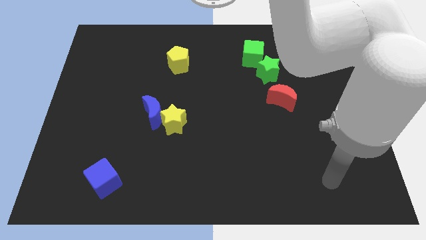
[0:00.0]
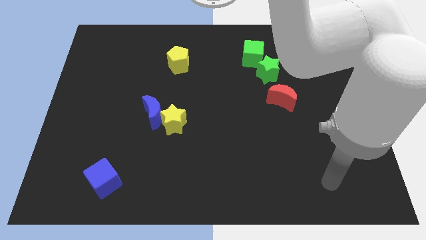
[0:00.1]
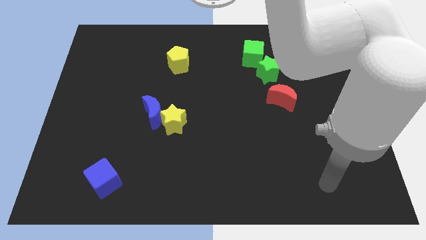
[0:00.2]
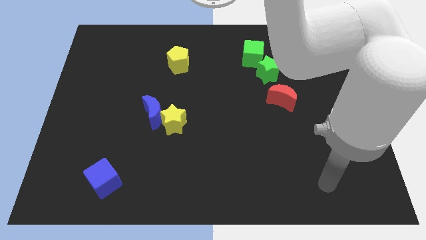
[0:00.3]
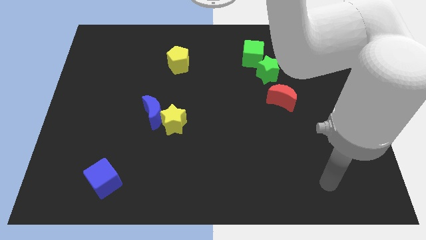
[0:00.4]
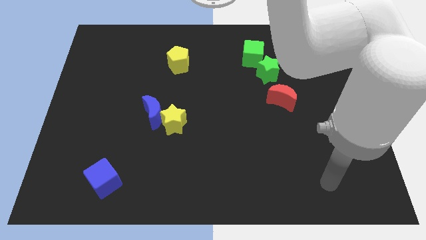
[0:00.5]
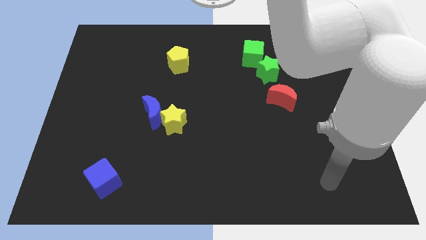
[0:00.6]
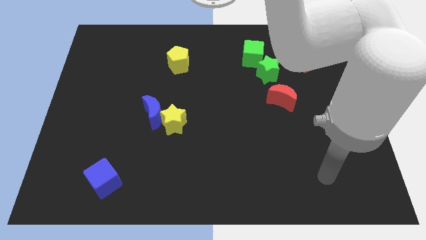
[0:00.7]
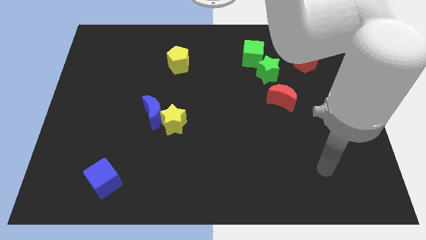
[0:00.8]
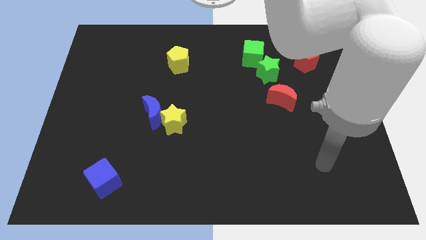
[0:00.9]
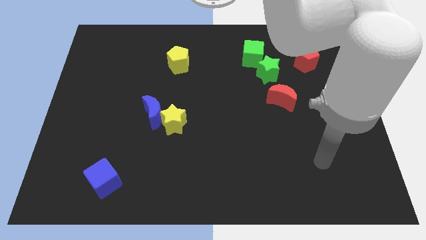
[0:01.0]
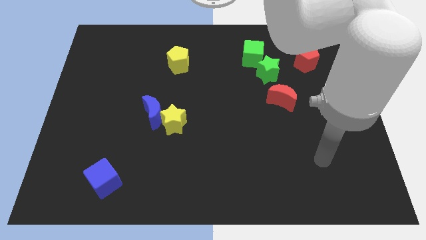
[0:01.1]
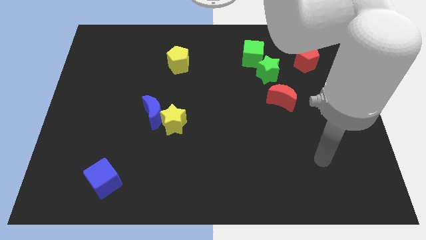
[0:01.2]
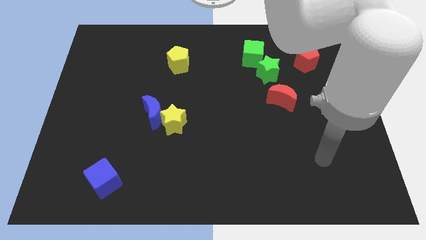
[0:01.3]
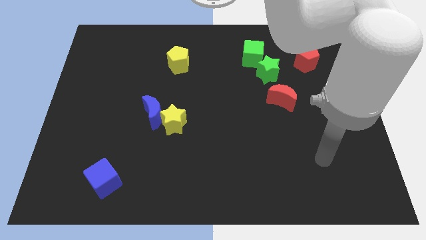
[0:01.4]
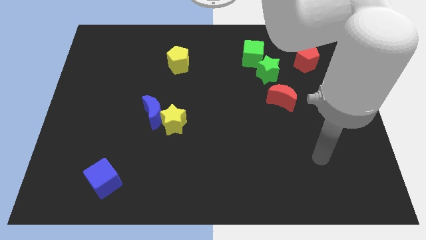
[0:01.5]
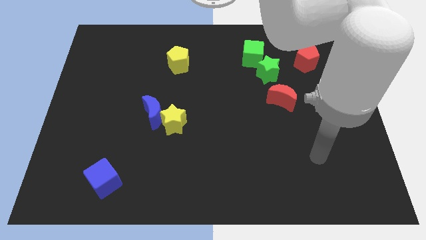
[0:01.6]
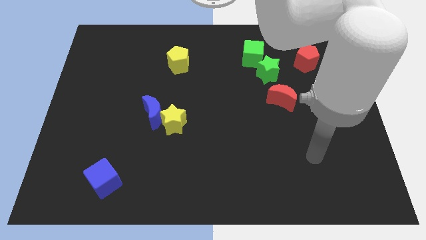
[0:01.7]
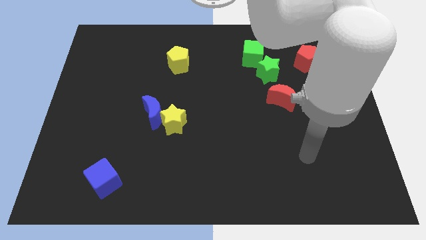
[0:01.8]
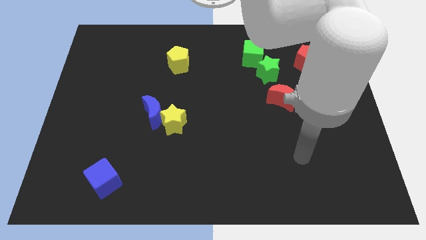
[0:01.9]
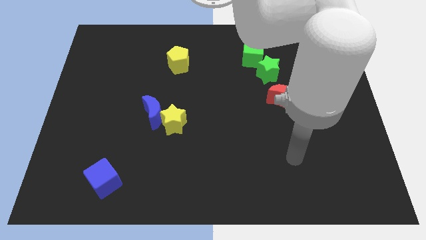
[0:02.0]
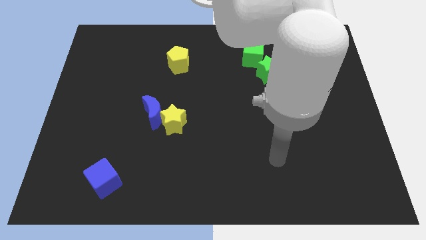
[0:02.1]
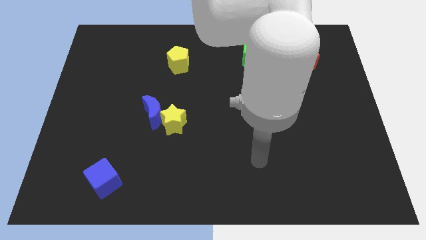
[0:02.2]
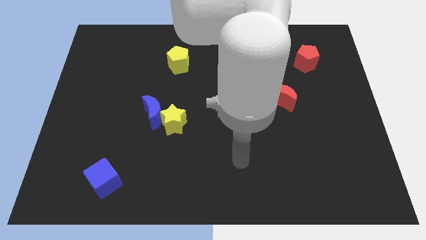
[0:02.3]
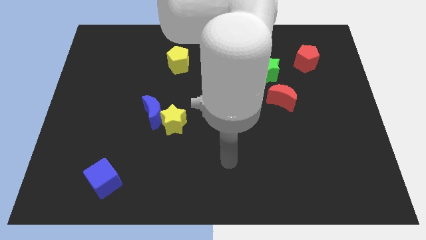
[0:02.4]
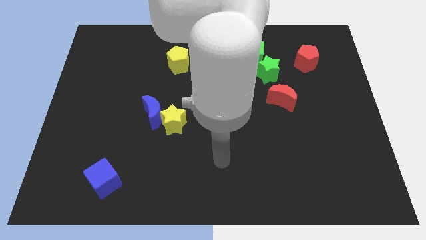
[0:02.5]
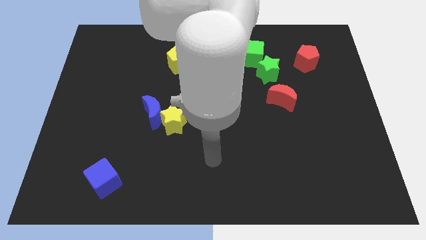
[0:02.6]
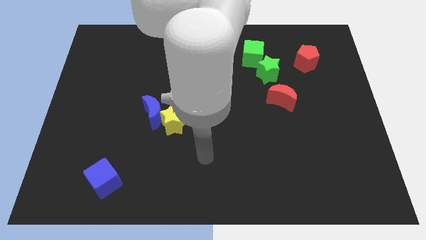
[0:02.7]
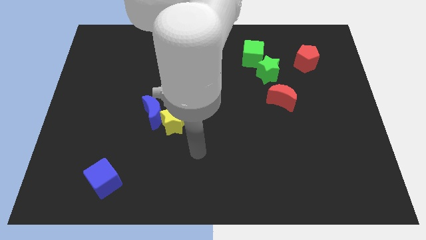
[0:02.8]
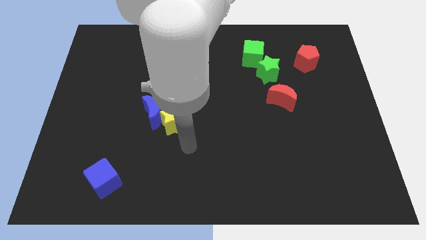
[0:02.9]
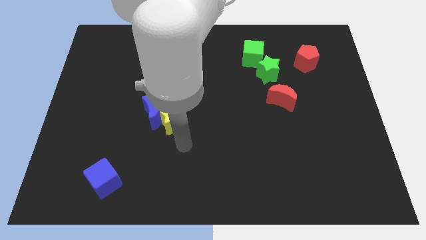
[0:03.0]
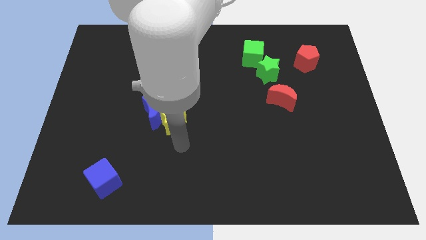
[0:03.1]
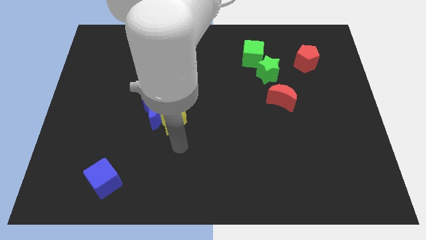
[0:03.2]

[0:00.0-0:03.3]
place your hand below the yellow star

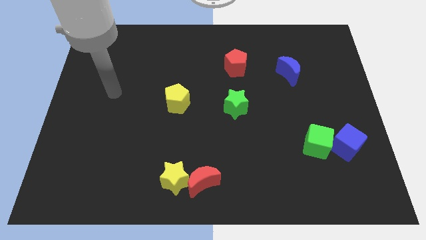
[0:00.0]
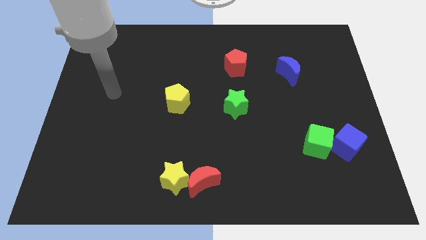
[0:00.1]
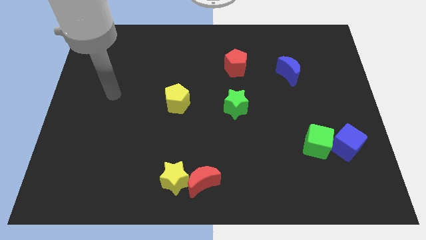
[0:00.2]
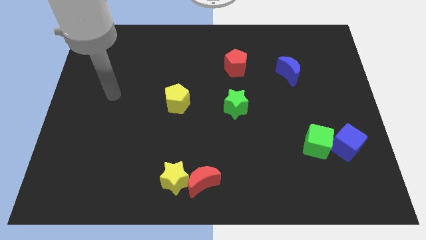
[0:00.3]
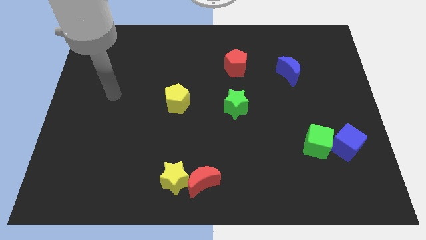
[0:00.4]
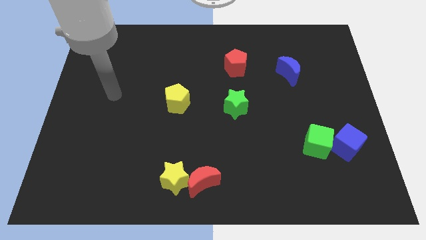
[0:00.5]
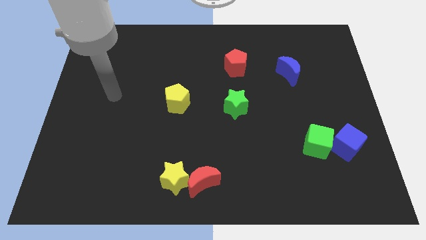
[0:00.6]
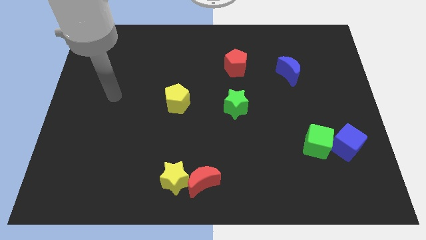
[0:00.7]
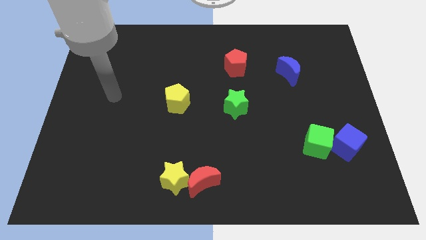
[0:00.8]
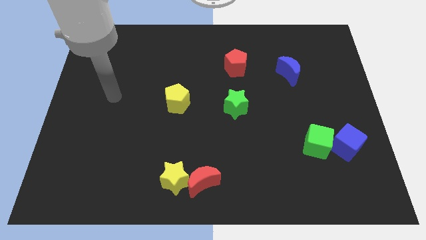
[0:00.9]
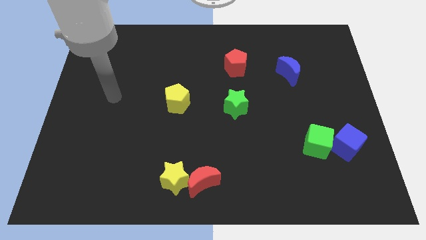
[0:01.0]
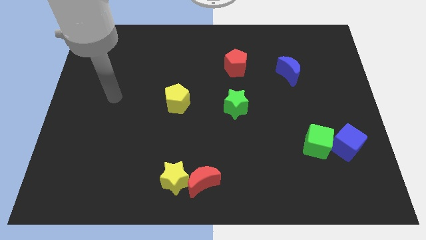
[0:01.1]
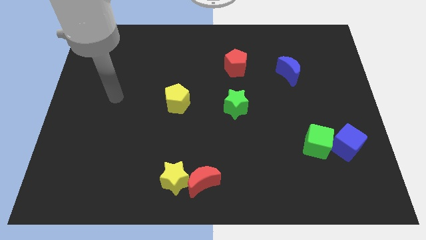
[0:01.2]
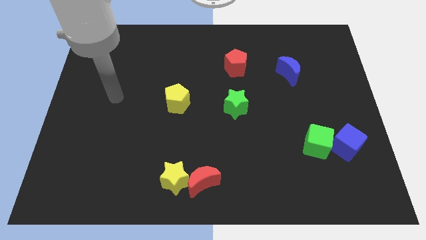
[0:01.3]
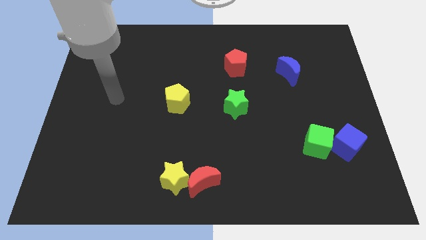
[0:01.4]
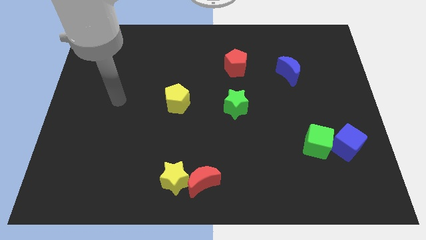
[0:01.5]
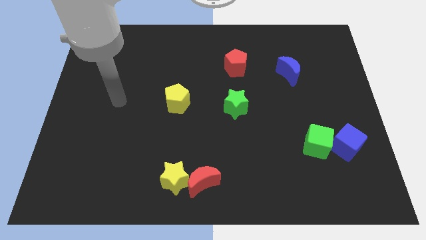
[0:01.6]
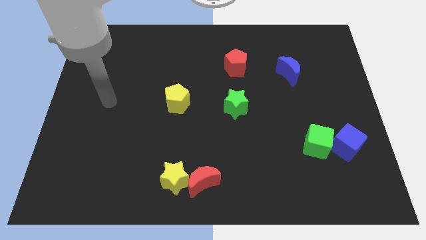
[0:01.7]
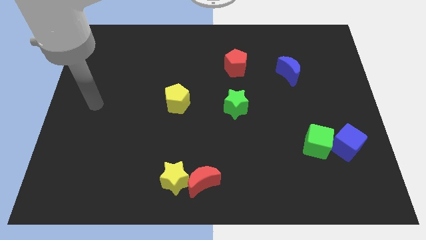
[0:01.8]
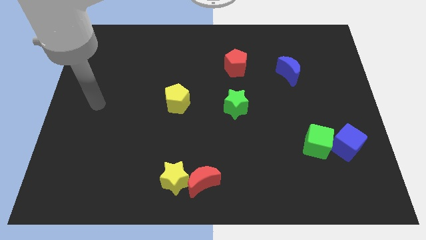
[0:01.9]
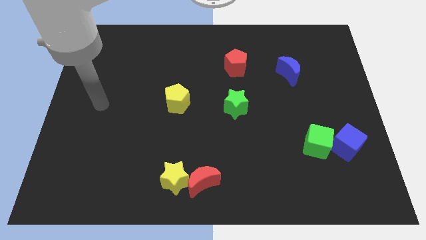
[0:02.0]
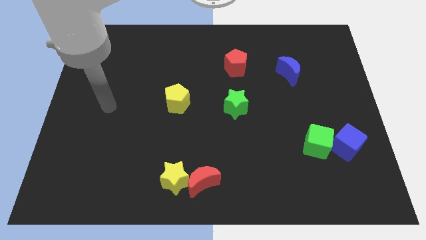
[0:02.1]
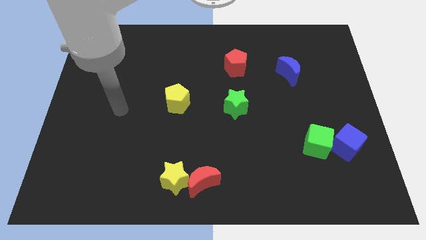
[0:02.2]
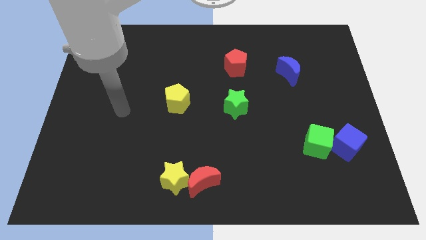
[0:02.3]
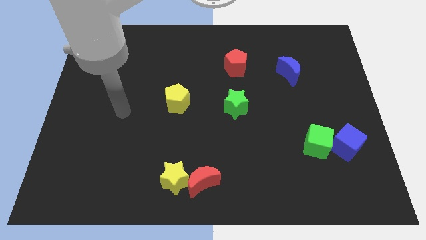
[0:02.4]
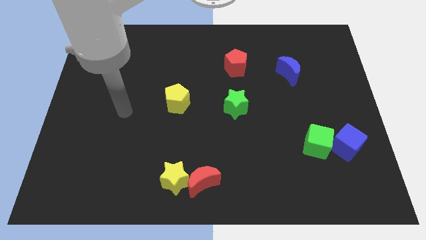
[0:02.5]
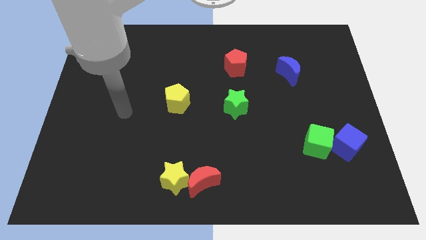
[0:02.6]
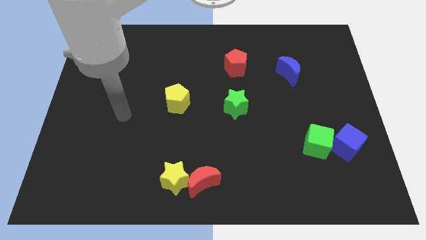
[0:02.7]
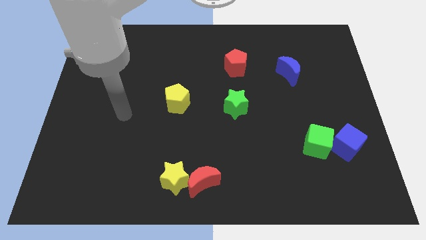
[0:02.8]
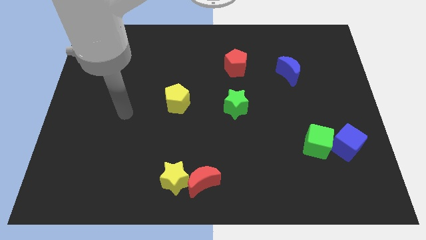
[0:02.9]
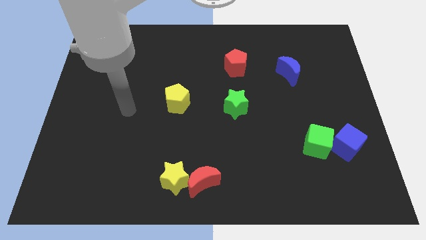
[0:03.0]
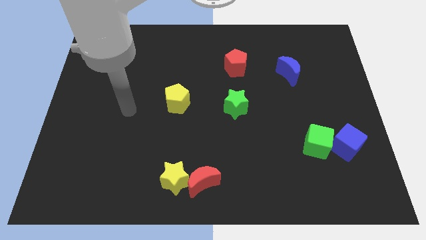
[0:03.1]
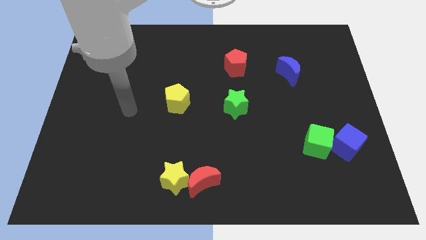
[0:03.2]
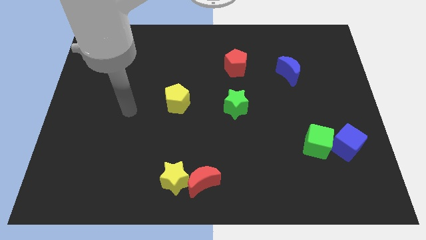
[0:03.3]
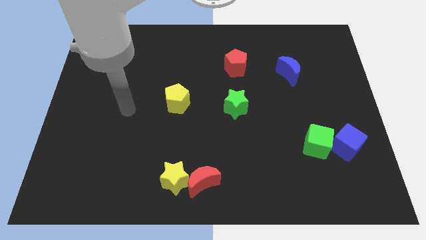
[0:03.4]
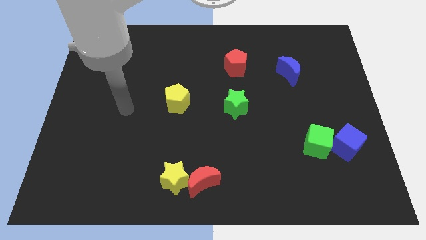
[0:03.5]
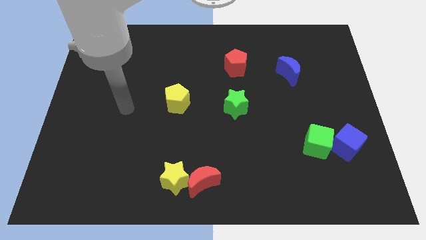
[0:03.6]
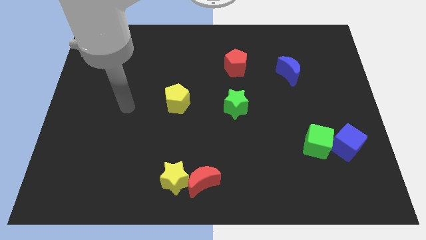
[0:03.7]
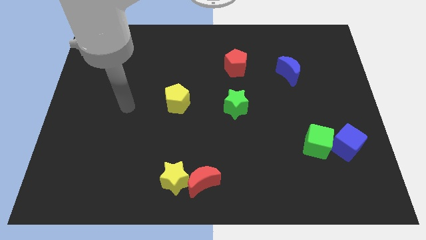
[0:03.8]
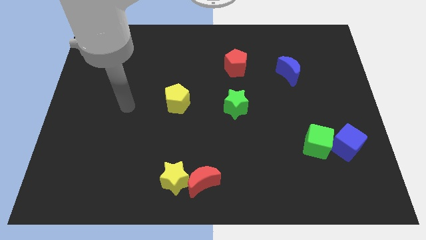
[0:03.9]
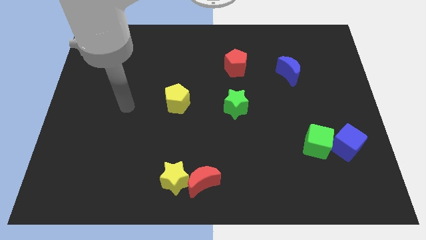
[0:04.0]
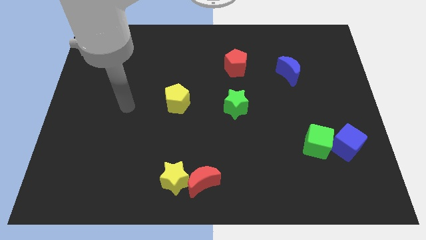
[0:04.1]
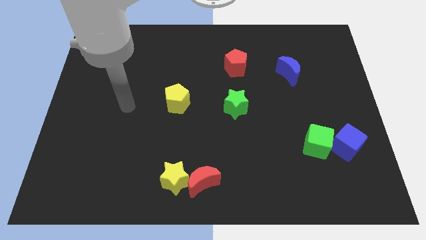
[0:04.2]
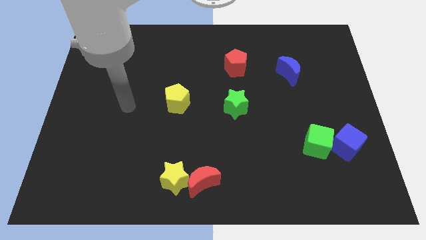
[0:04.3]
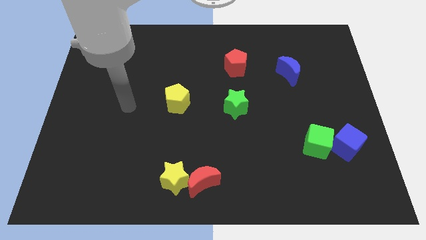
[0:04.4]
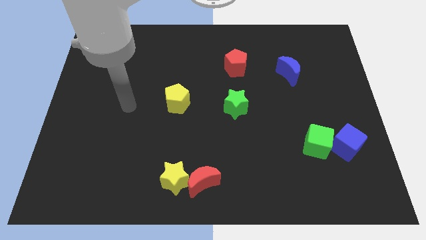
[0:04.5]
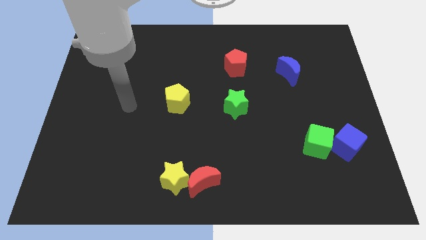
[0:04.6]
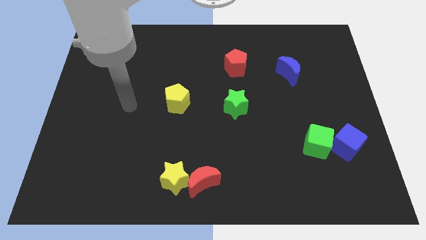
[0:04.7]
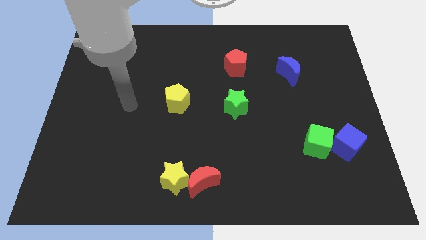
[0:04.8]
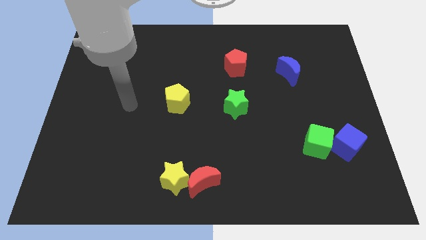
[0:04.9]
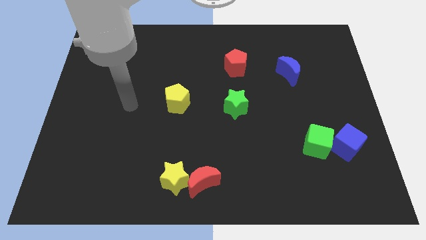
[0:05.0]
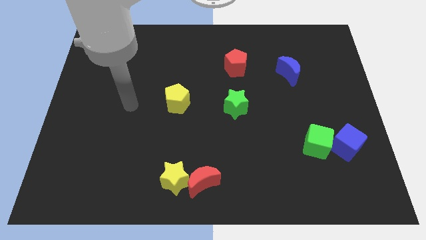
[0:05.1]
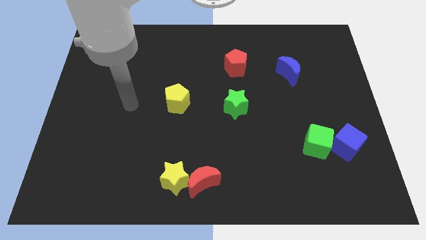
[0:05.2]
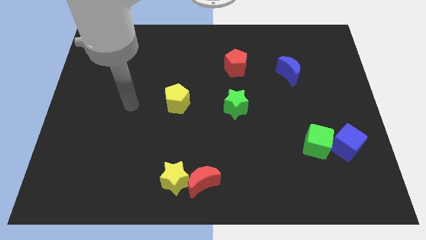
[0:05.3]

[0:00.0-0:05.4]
move your arm to the left of the yellow pentagon

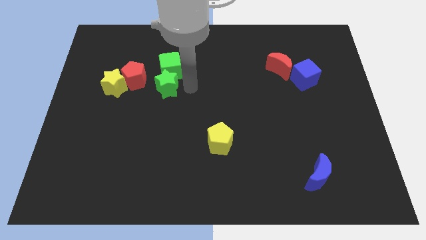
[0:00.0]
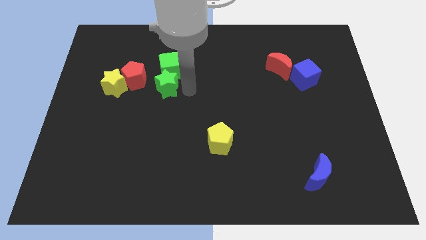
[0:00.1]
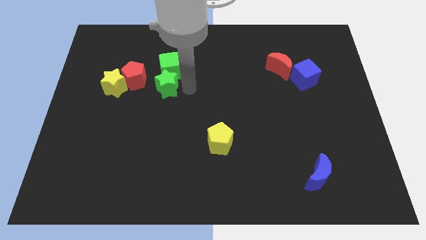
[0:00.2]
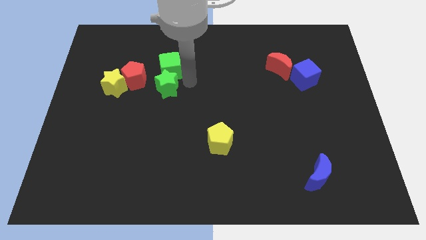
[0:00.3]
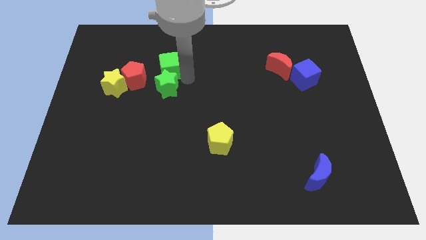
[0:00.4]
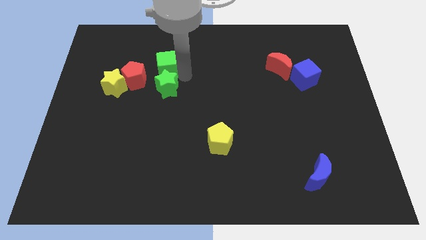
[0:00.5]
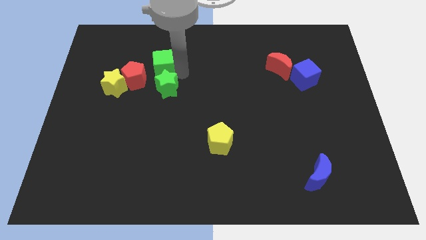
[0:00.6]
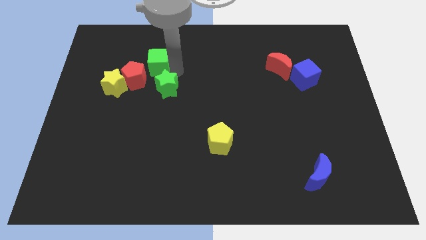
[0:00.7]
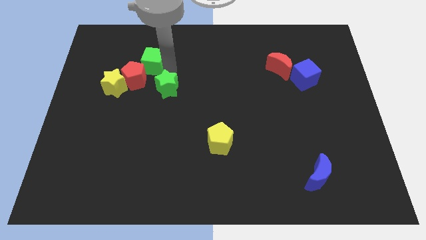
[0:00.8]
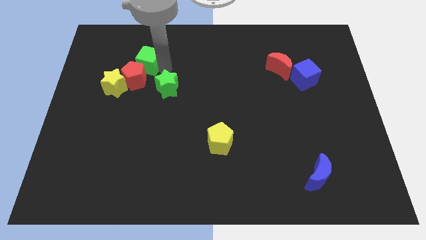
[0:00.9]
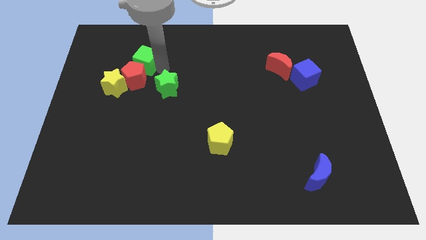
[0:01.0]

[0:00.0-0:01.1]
place the green cube on top of red pentagon
